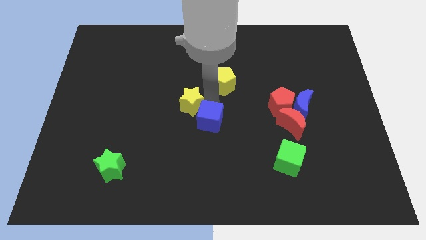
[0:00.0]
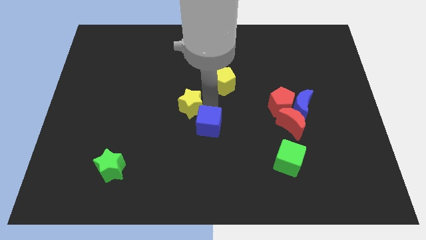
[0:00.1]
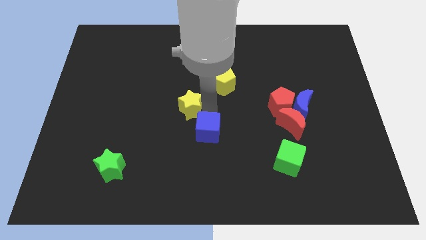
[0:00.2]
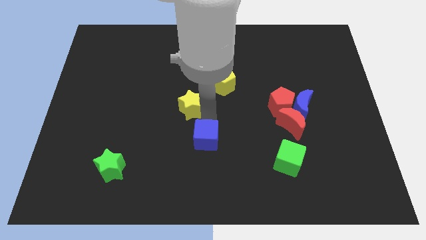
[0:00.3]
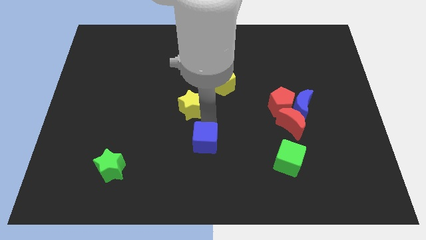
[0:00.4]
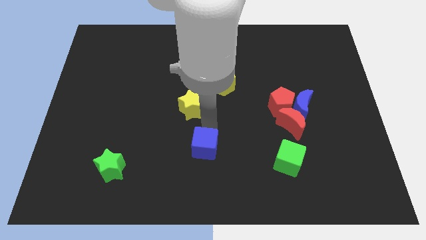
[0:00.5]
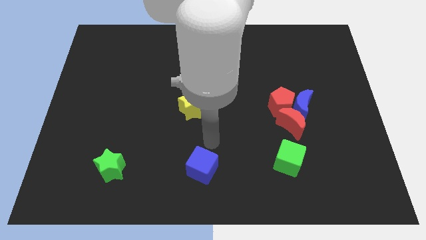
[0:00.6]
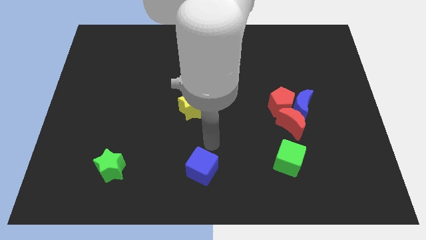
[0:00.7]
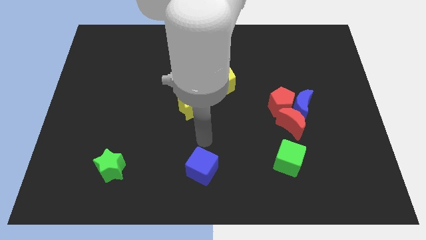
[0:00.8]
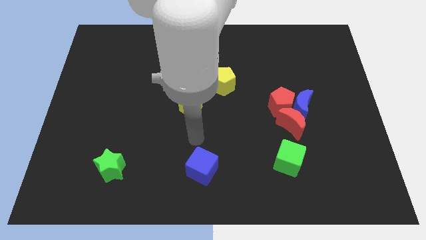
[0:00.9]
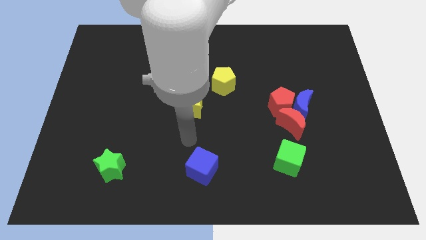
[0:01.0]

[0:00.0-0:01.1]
separate the blue cube from yellow star

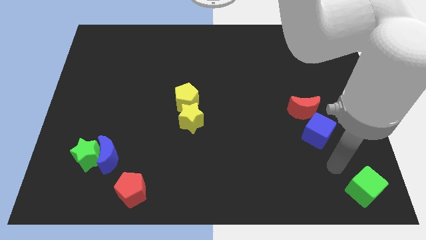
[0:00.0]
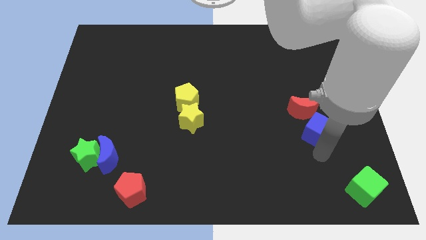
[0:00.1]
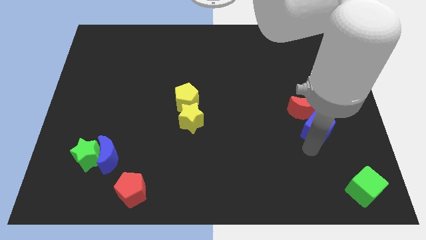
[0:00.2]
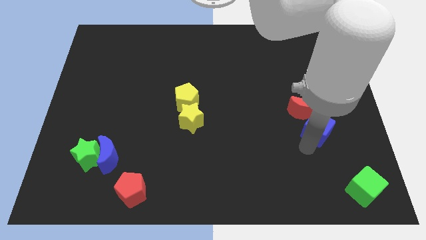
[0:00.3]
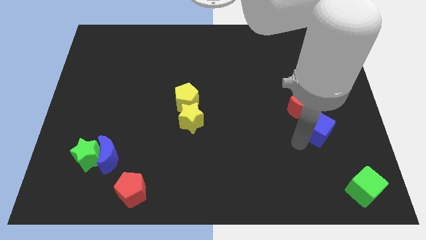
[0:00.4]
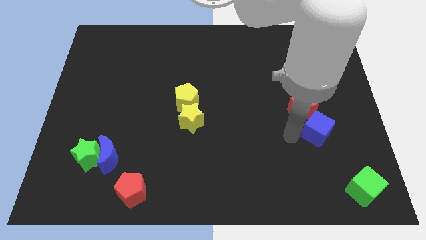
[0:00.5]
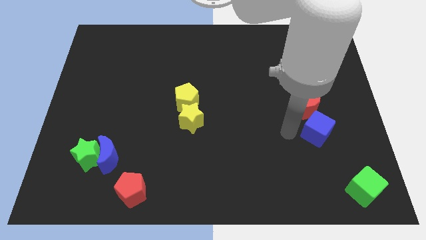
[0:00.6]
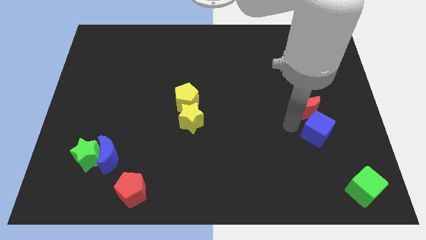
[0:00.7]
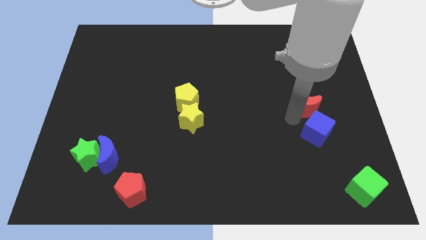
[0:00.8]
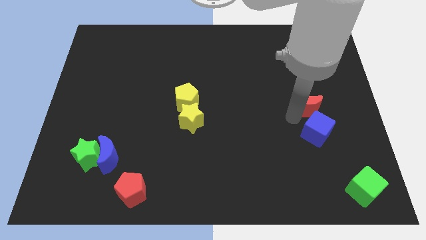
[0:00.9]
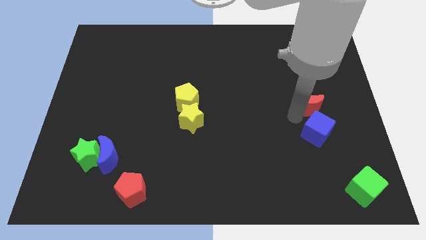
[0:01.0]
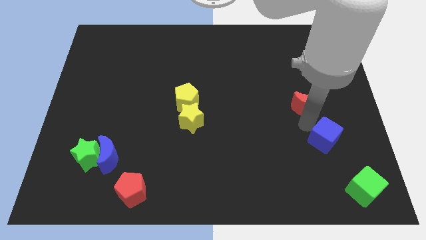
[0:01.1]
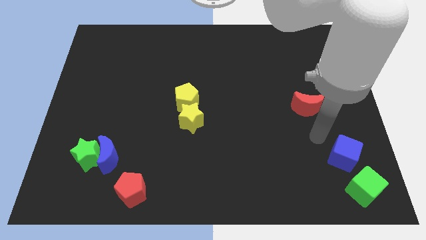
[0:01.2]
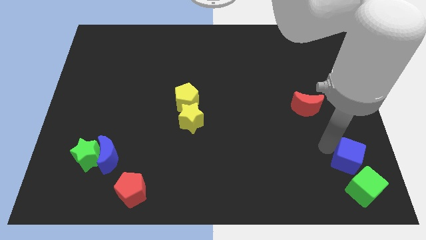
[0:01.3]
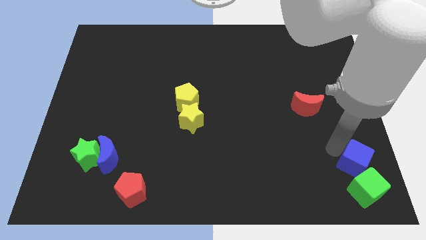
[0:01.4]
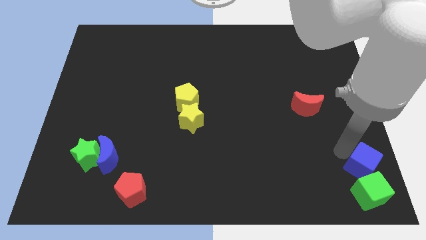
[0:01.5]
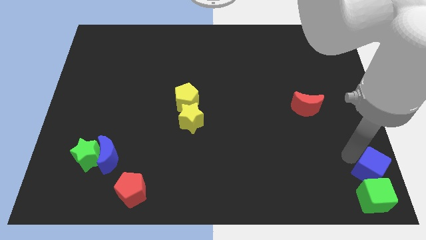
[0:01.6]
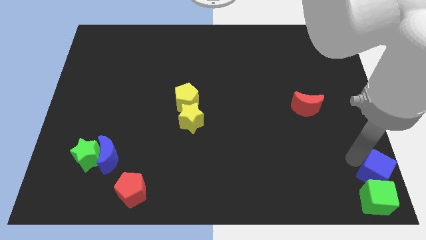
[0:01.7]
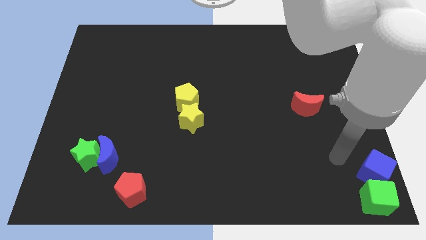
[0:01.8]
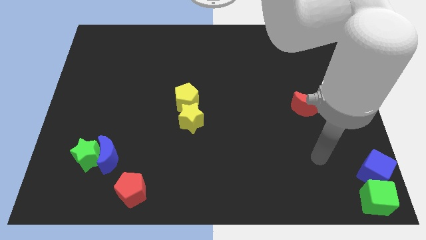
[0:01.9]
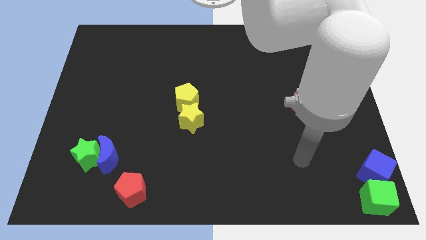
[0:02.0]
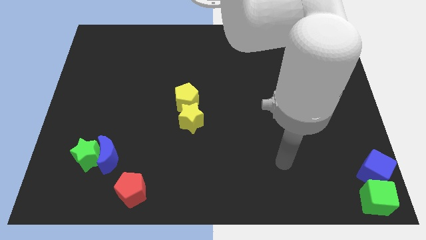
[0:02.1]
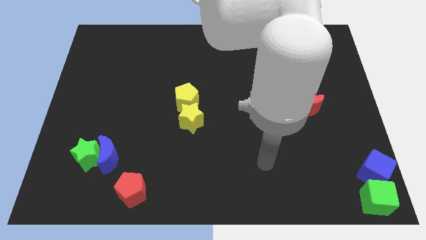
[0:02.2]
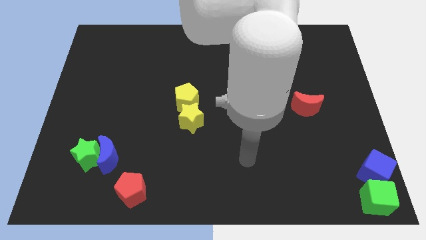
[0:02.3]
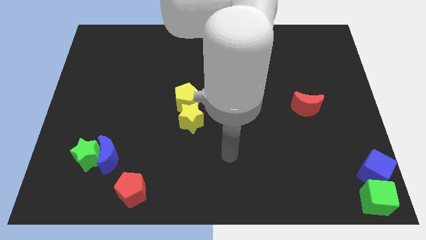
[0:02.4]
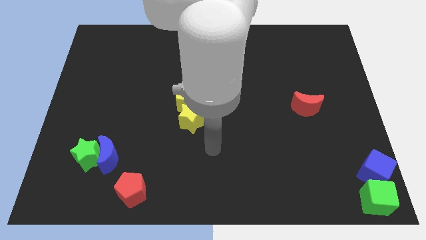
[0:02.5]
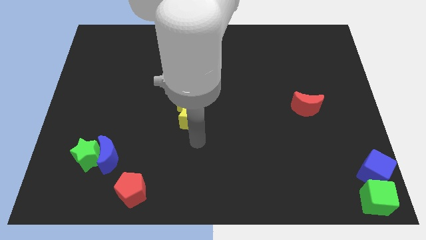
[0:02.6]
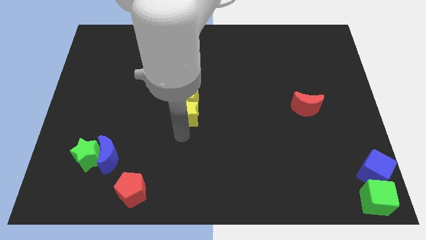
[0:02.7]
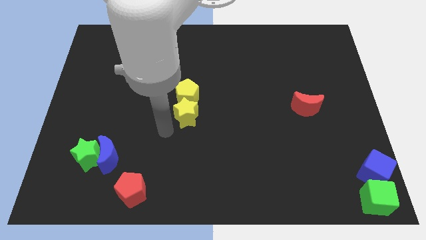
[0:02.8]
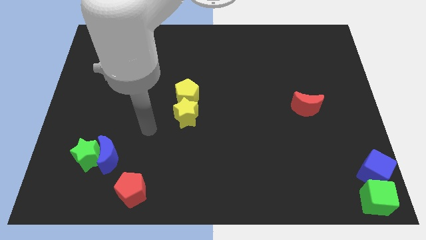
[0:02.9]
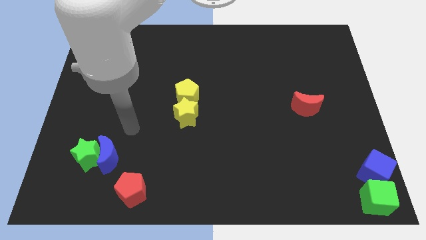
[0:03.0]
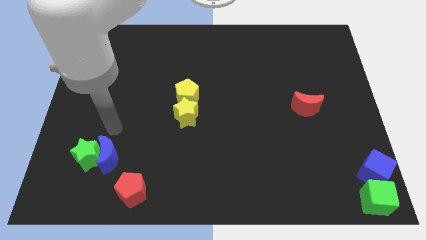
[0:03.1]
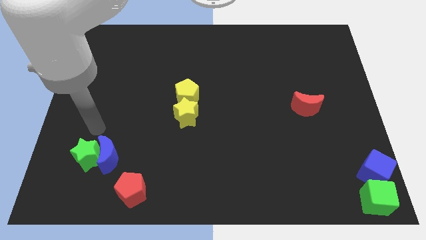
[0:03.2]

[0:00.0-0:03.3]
move the blue cube away from the red moon

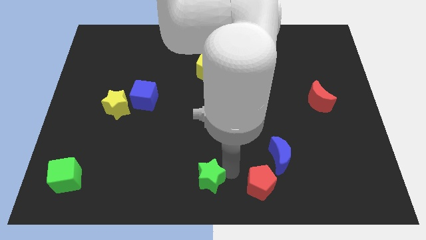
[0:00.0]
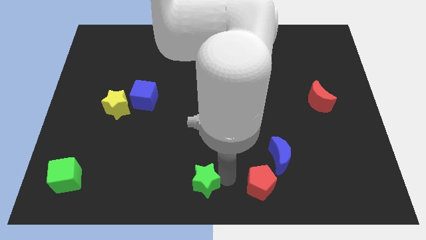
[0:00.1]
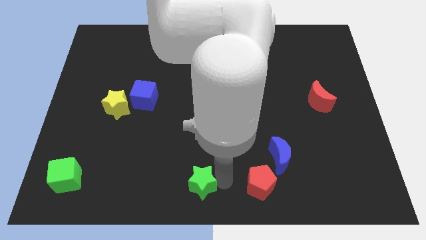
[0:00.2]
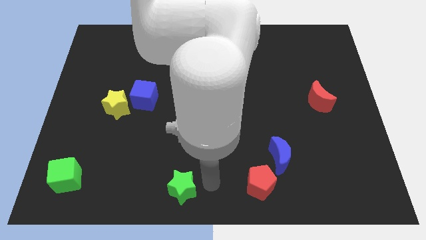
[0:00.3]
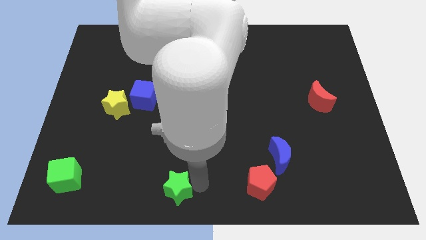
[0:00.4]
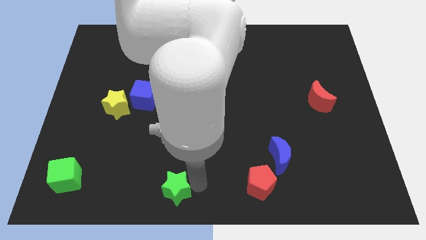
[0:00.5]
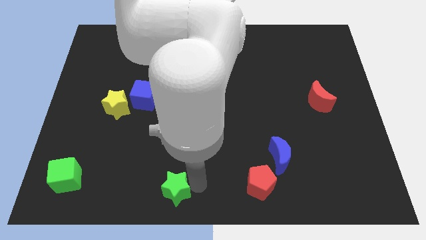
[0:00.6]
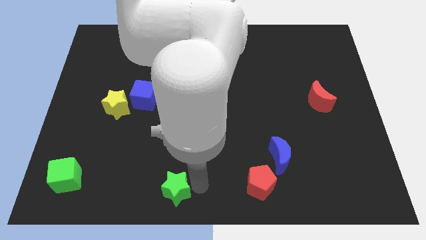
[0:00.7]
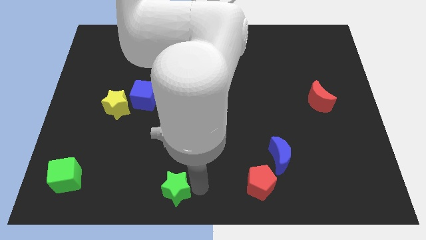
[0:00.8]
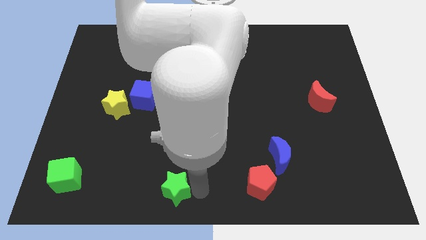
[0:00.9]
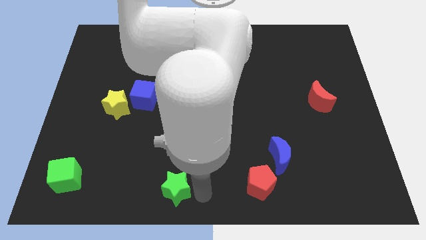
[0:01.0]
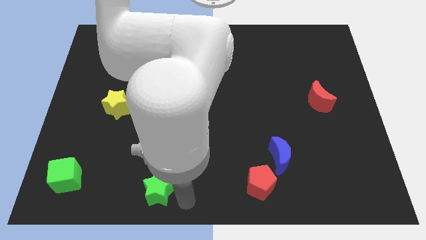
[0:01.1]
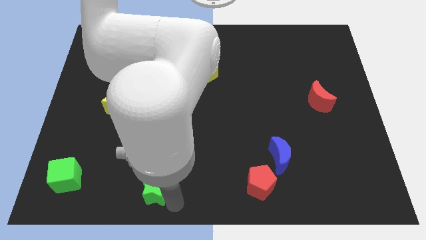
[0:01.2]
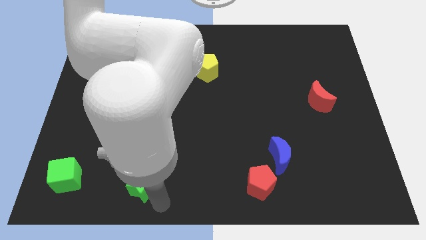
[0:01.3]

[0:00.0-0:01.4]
push green star towards the green cube

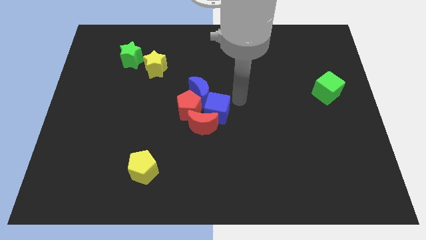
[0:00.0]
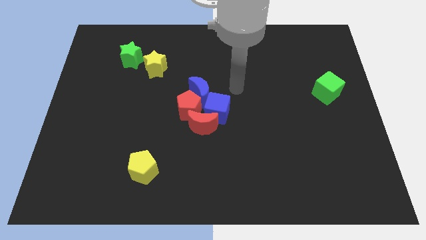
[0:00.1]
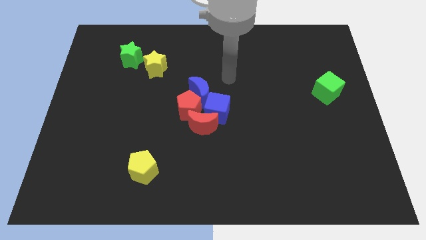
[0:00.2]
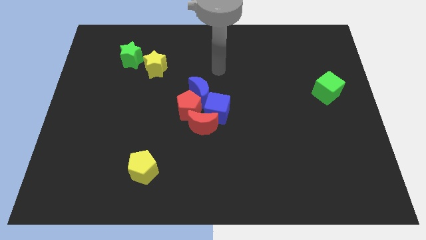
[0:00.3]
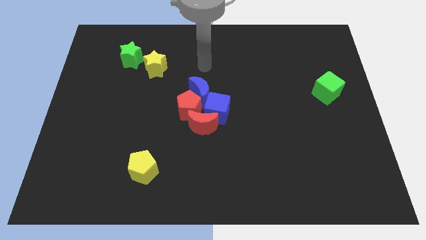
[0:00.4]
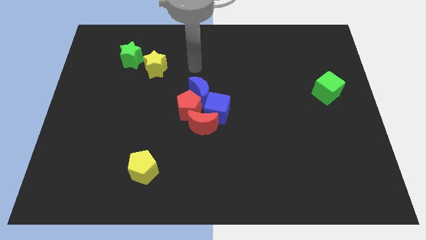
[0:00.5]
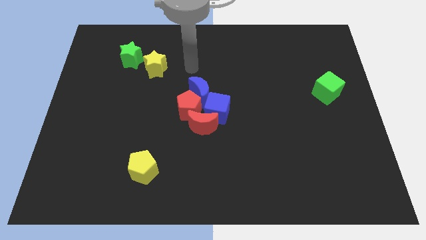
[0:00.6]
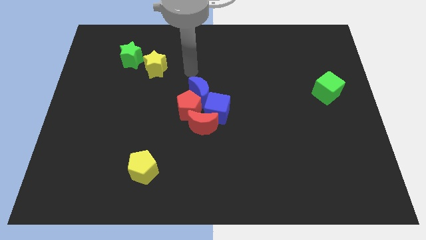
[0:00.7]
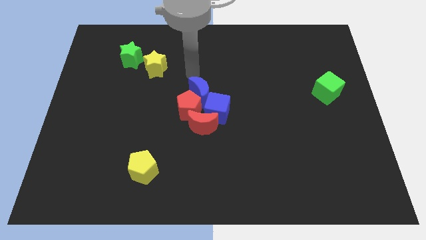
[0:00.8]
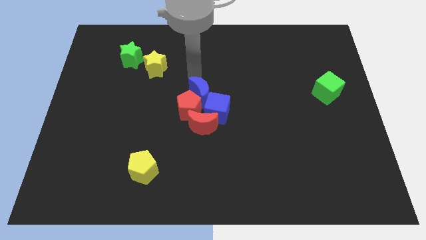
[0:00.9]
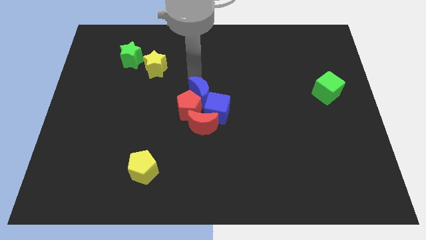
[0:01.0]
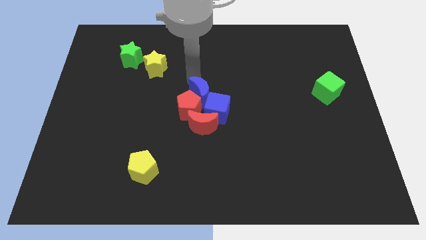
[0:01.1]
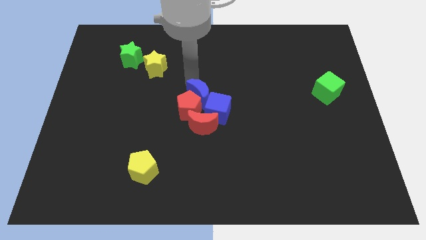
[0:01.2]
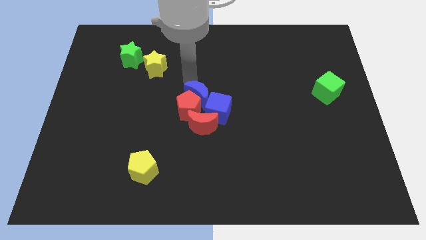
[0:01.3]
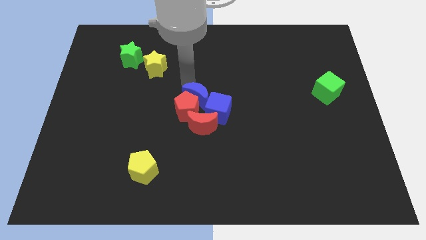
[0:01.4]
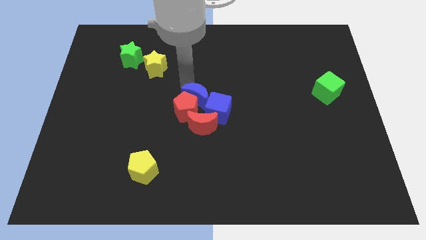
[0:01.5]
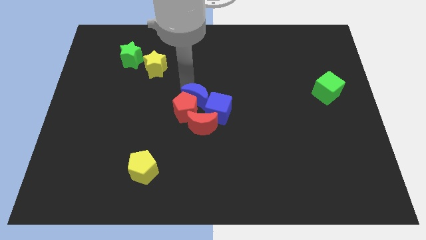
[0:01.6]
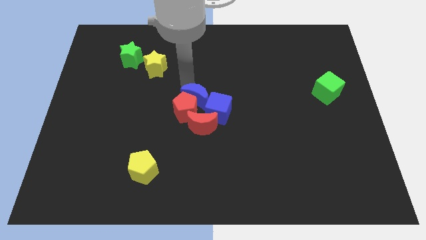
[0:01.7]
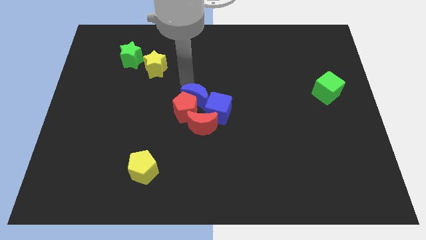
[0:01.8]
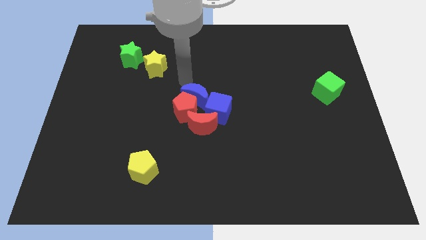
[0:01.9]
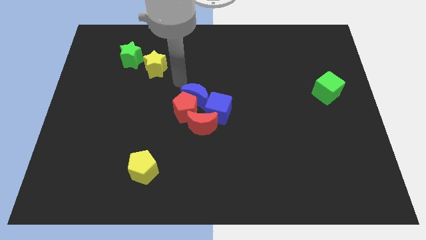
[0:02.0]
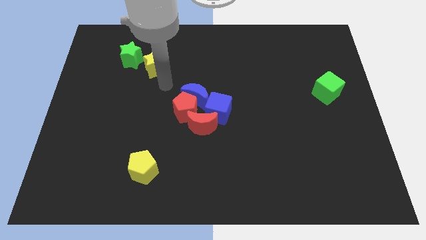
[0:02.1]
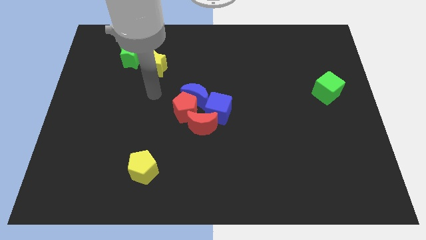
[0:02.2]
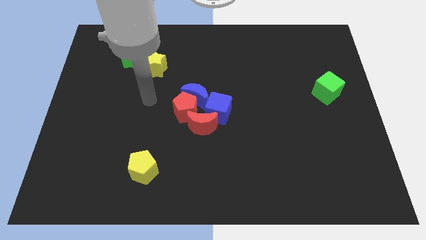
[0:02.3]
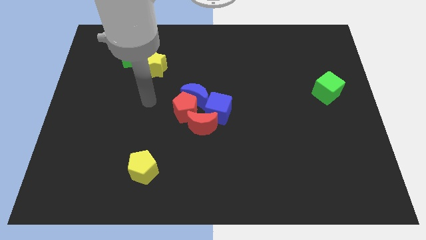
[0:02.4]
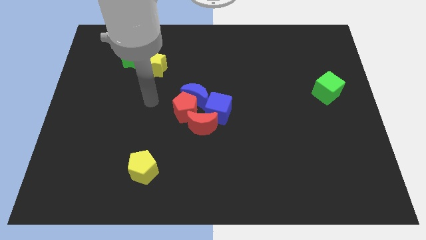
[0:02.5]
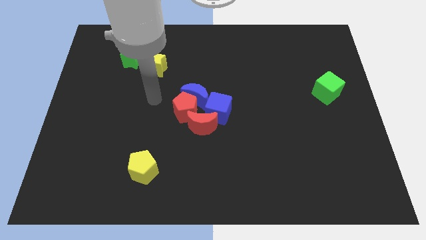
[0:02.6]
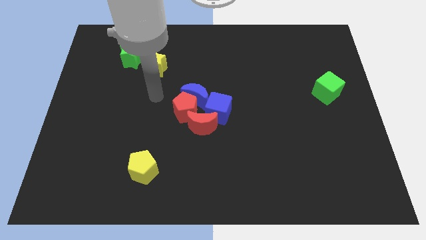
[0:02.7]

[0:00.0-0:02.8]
move the blue moon slightly into the red pentagon

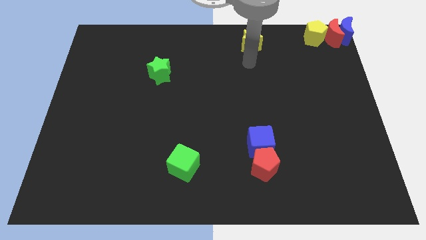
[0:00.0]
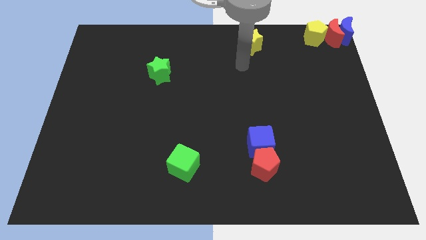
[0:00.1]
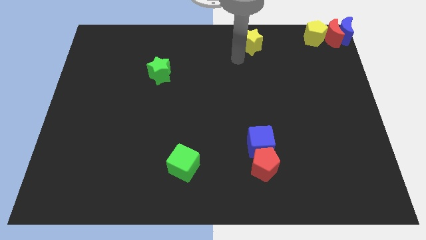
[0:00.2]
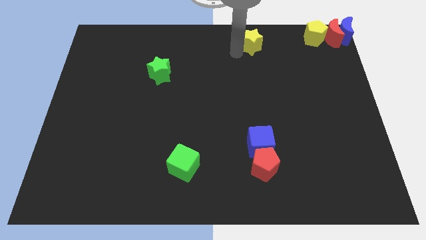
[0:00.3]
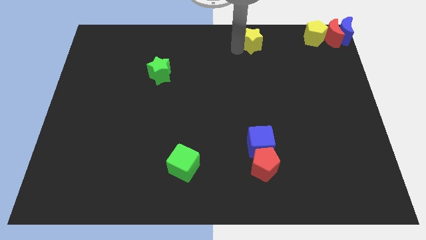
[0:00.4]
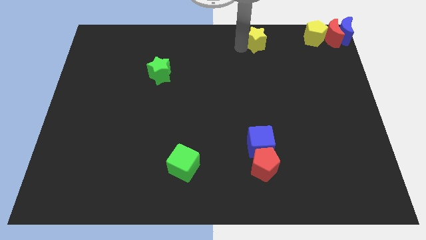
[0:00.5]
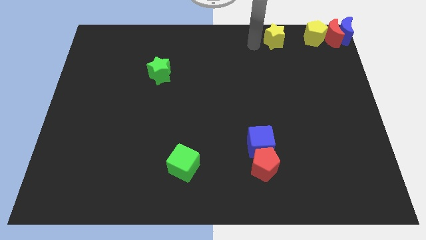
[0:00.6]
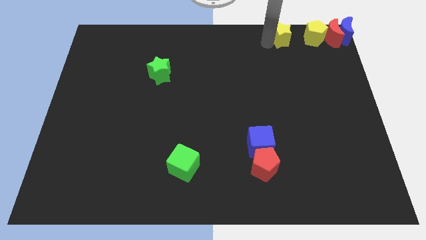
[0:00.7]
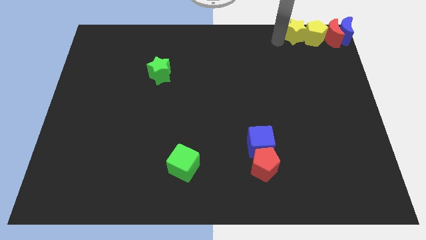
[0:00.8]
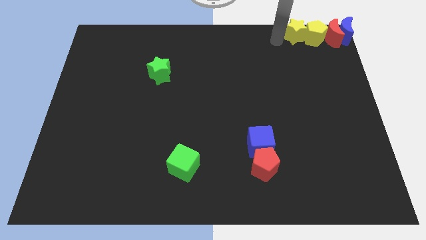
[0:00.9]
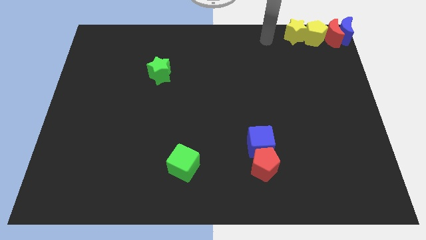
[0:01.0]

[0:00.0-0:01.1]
push yellow star into yellow pentagon
